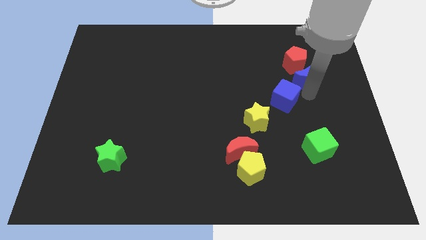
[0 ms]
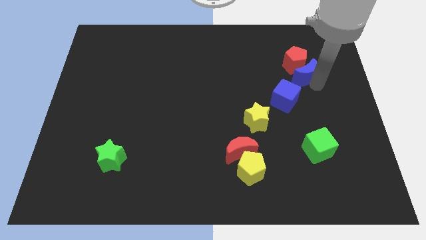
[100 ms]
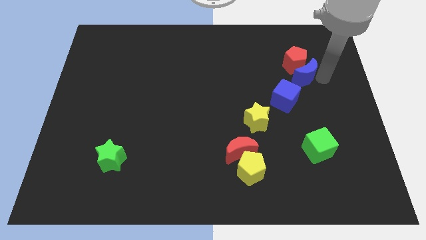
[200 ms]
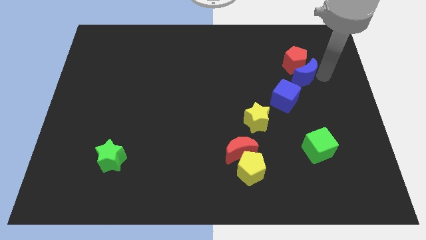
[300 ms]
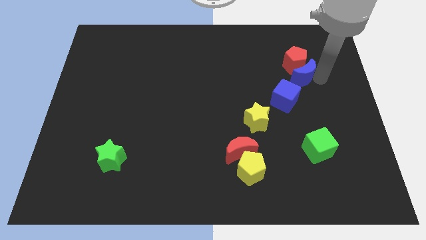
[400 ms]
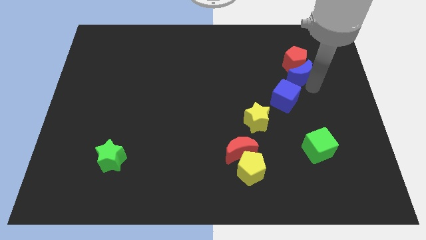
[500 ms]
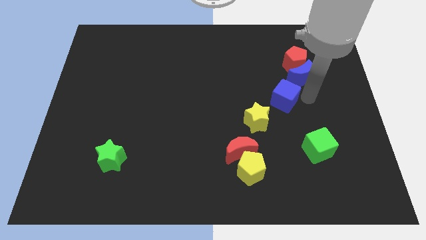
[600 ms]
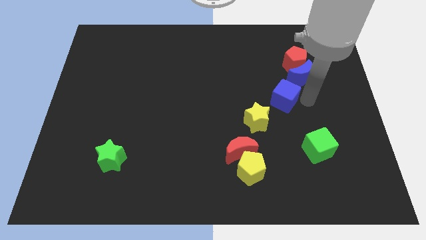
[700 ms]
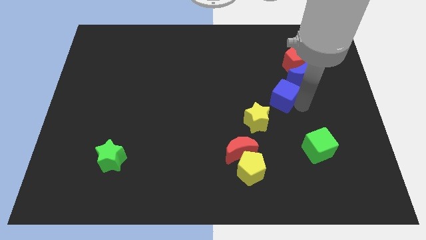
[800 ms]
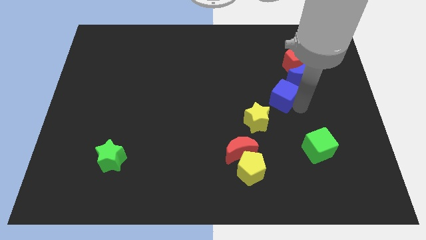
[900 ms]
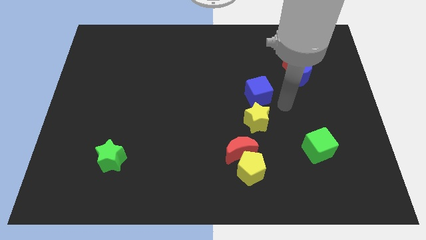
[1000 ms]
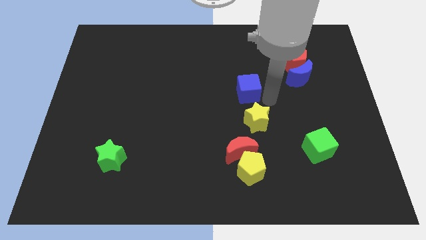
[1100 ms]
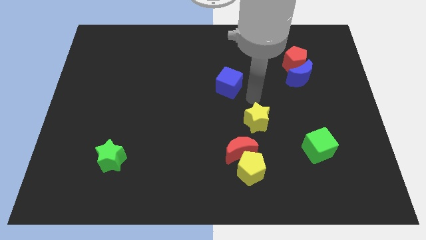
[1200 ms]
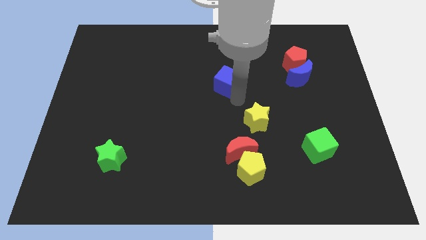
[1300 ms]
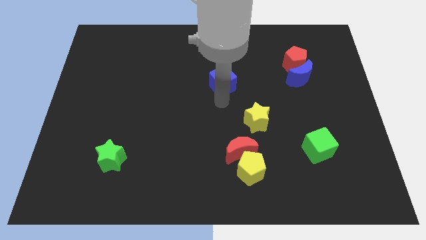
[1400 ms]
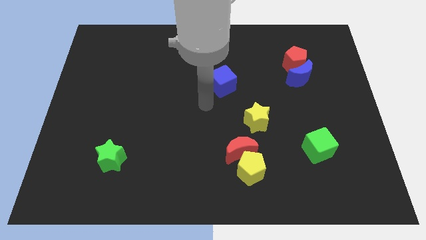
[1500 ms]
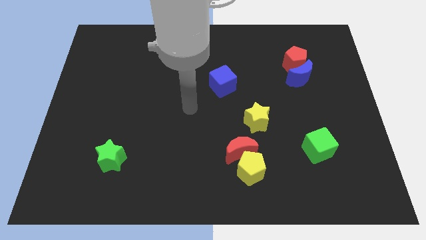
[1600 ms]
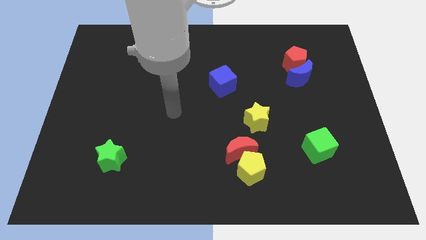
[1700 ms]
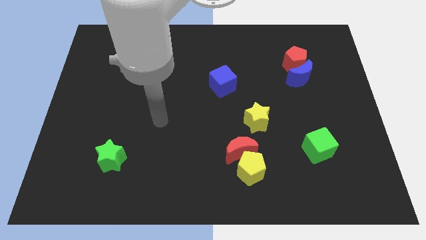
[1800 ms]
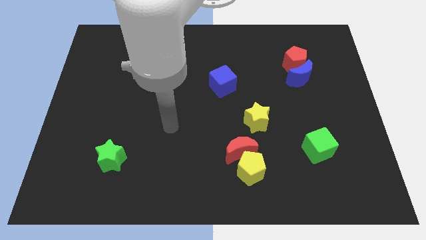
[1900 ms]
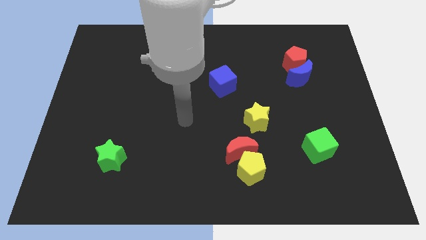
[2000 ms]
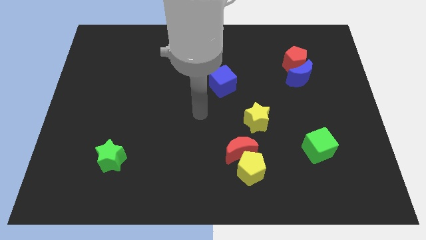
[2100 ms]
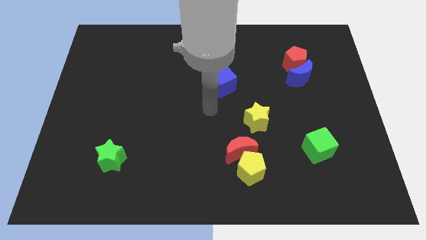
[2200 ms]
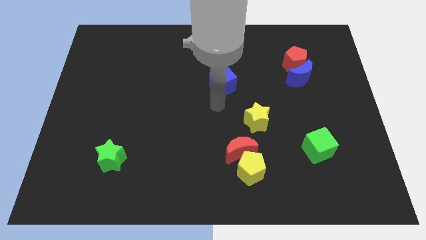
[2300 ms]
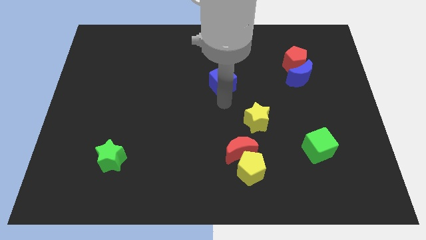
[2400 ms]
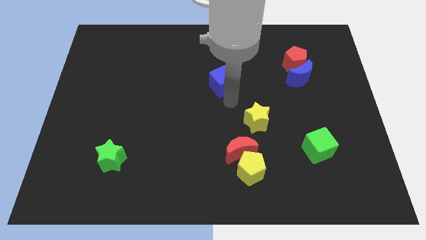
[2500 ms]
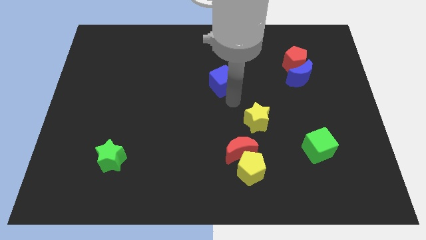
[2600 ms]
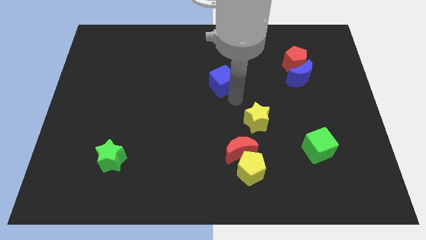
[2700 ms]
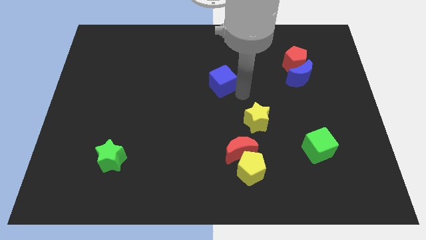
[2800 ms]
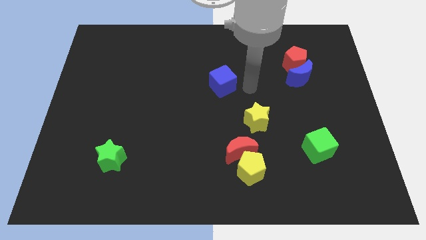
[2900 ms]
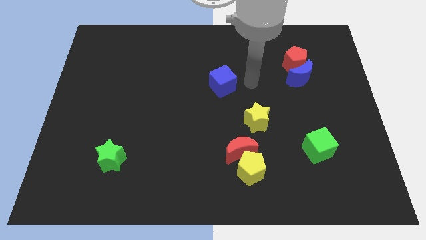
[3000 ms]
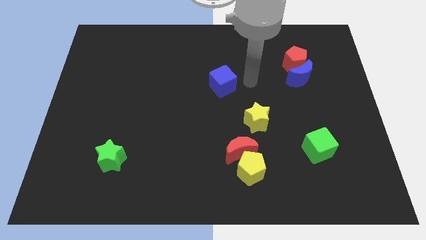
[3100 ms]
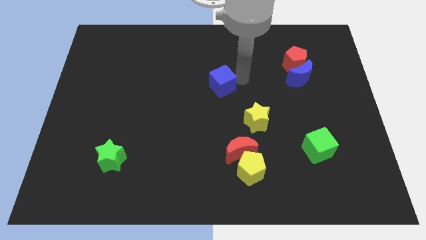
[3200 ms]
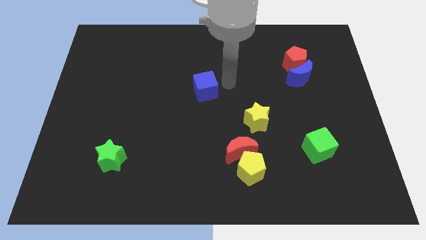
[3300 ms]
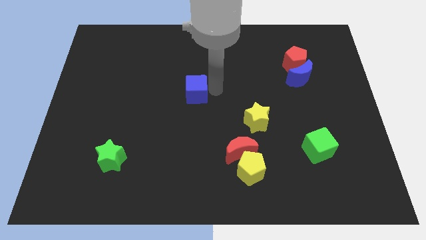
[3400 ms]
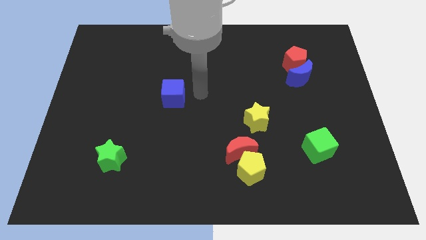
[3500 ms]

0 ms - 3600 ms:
move the blue cube to the center of the board

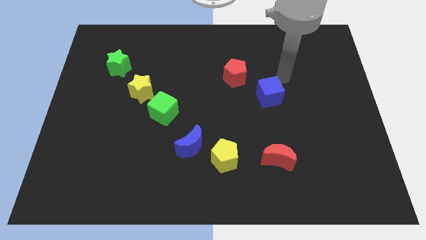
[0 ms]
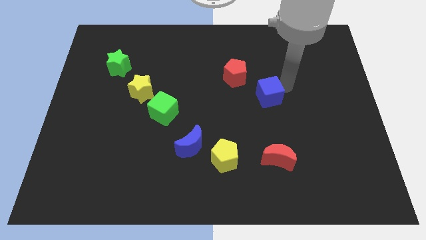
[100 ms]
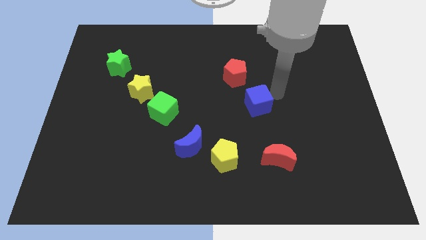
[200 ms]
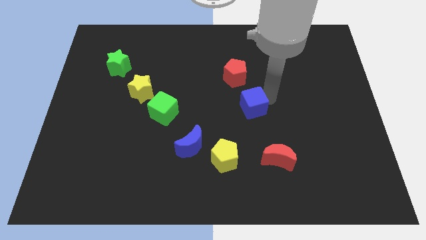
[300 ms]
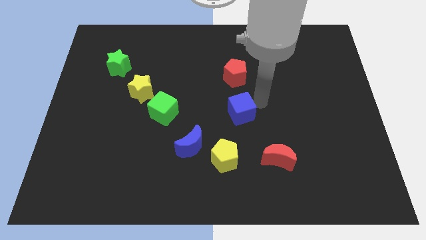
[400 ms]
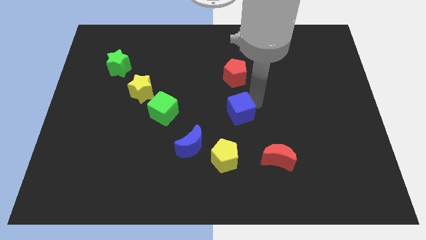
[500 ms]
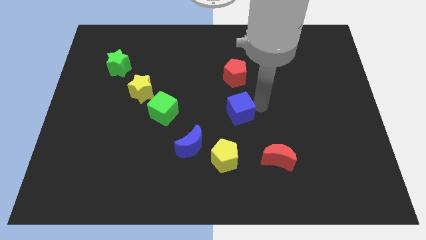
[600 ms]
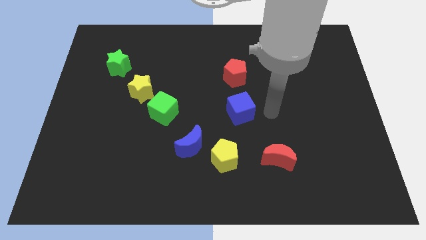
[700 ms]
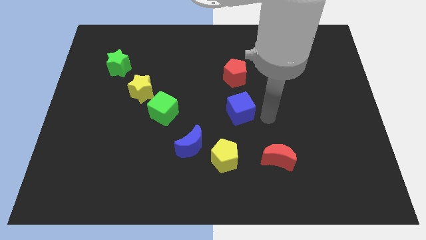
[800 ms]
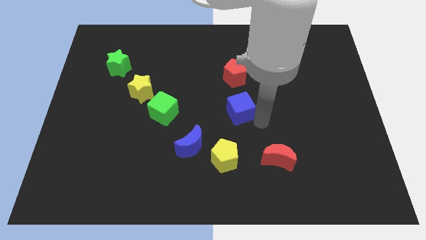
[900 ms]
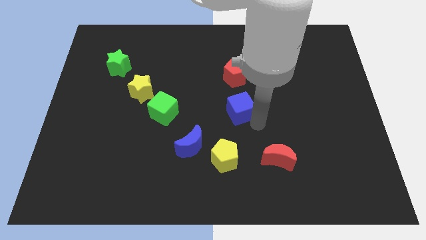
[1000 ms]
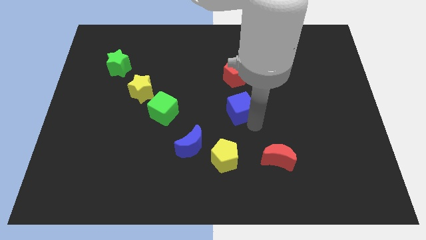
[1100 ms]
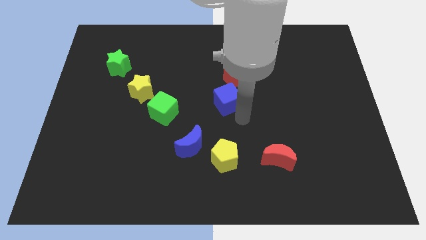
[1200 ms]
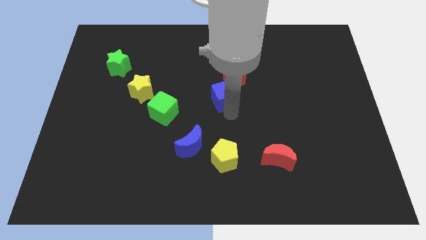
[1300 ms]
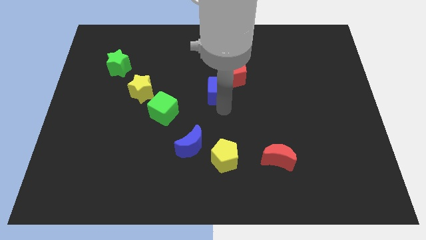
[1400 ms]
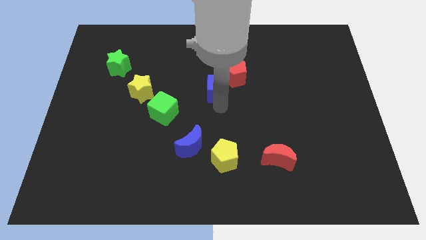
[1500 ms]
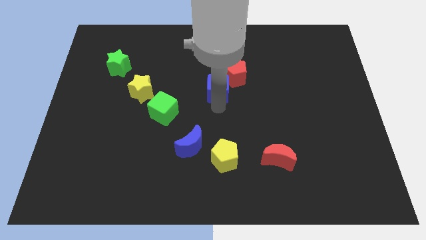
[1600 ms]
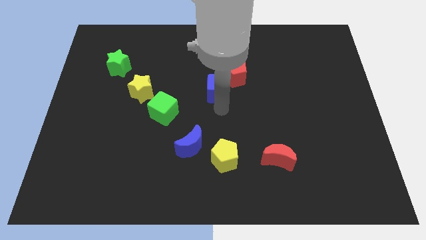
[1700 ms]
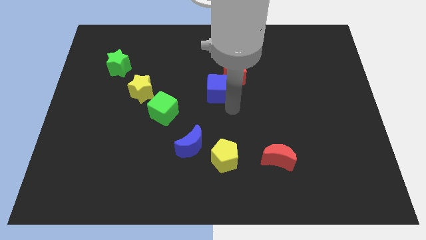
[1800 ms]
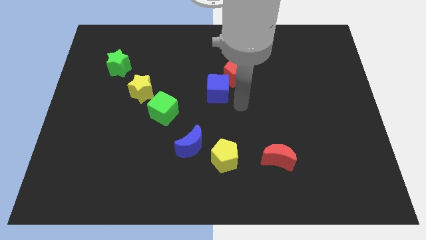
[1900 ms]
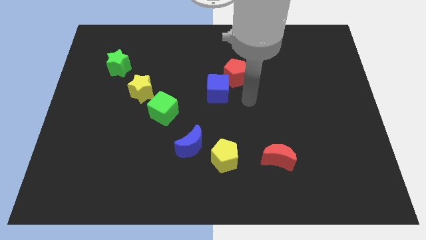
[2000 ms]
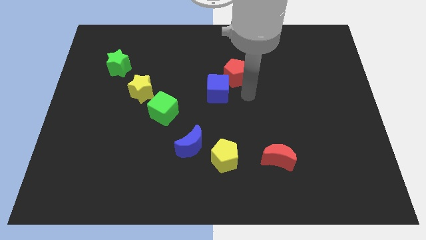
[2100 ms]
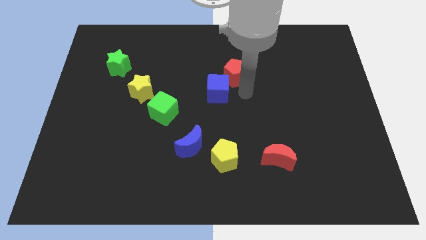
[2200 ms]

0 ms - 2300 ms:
place the blue cube right side of the green cube

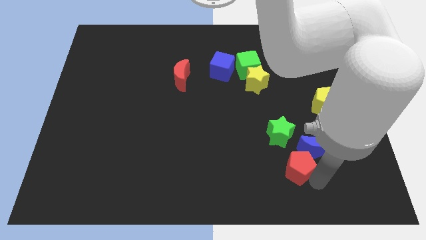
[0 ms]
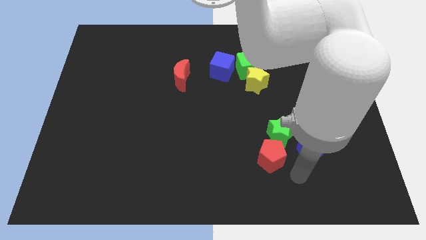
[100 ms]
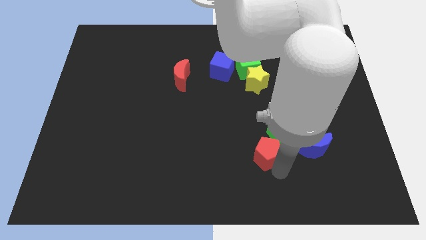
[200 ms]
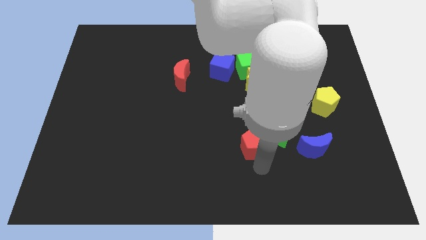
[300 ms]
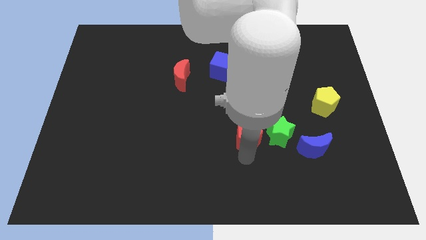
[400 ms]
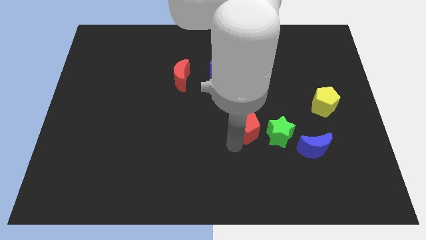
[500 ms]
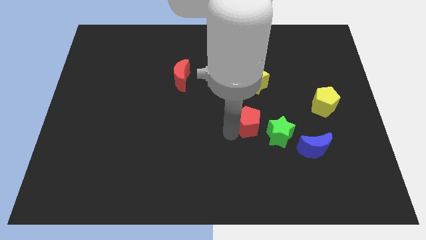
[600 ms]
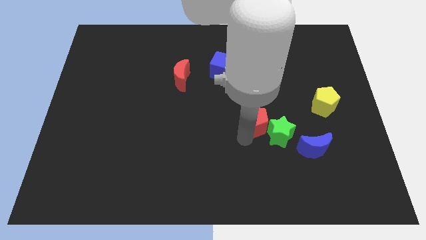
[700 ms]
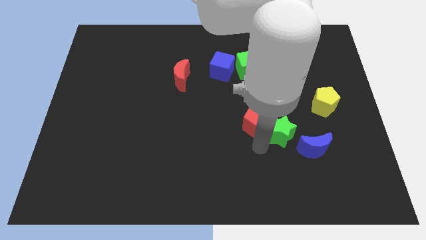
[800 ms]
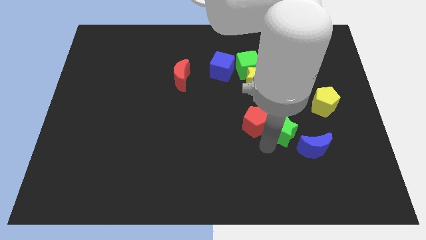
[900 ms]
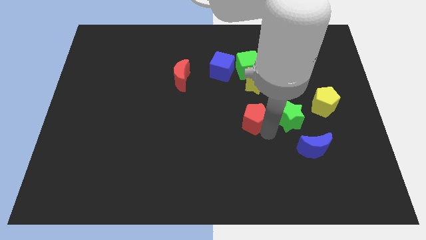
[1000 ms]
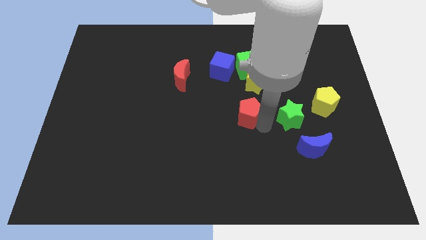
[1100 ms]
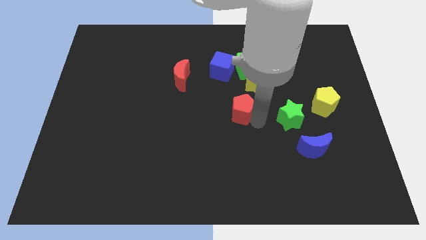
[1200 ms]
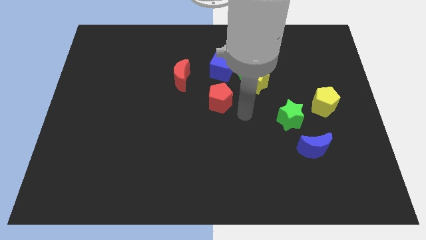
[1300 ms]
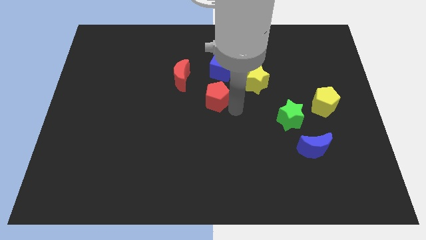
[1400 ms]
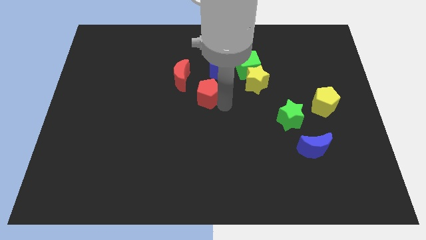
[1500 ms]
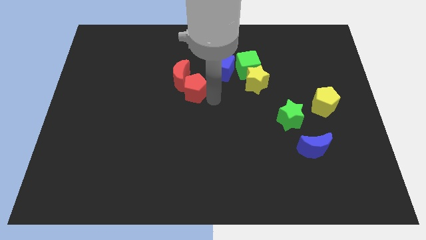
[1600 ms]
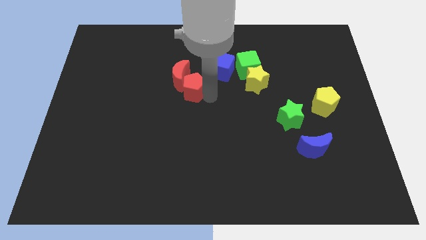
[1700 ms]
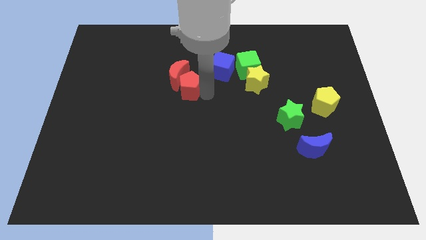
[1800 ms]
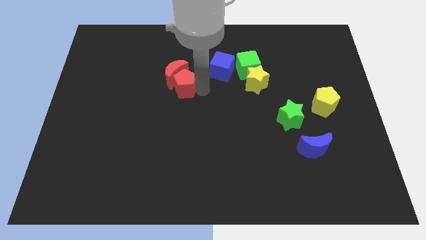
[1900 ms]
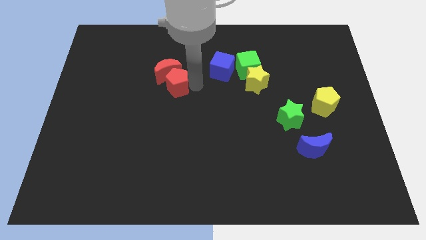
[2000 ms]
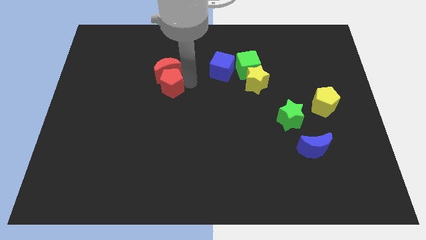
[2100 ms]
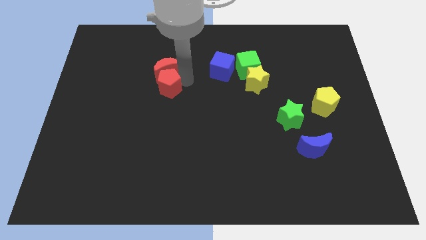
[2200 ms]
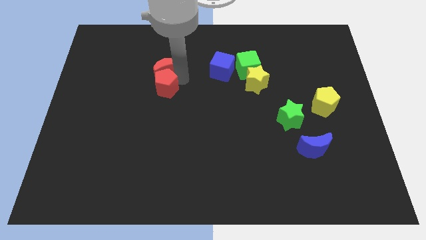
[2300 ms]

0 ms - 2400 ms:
place the red pentagon below the red crescent

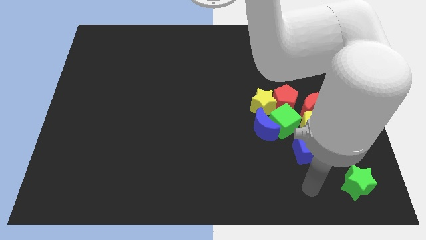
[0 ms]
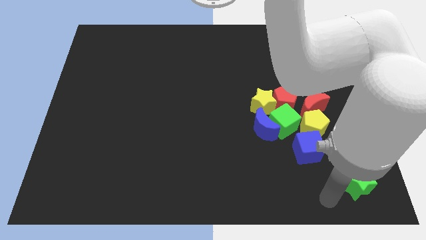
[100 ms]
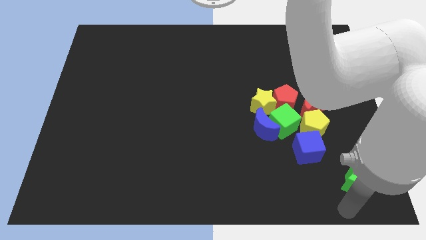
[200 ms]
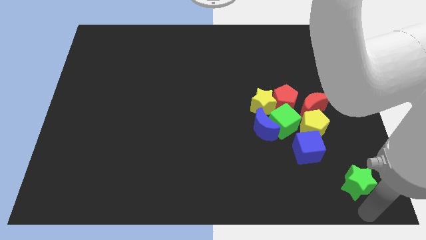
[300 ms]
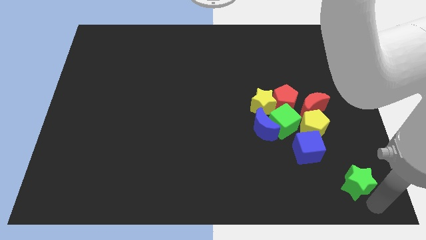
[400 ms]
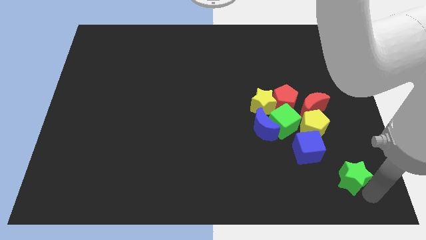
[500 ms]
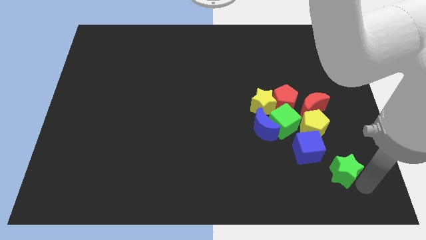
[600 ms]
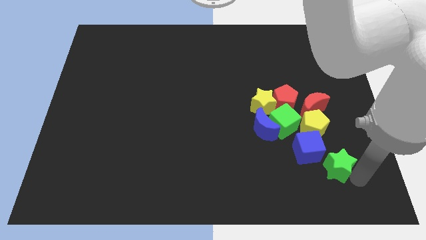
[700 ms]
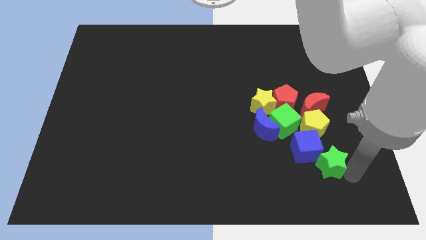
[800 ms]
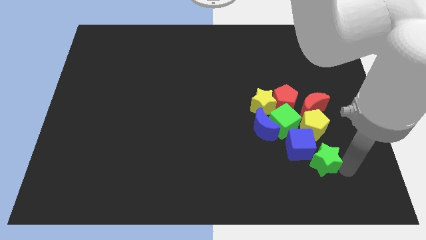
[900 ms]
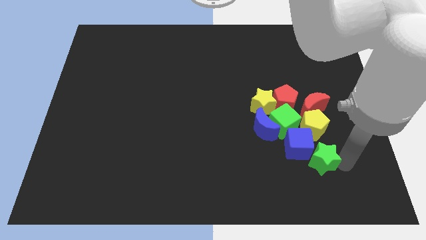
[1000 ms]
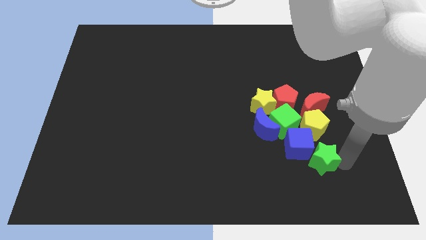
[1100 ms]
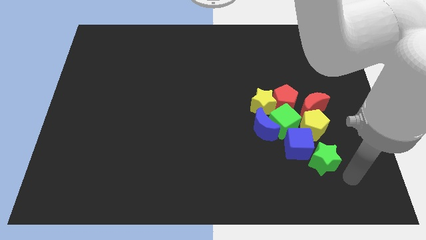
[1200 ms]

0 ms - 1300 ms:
push the green star close to the blue cube
